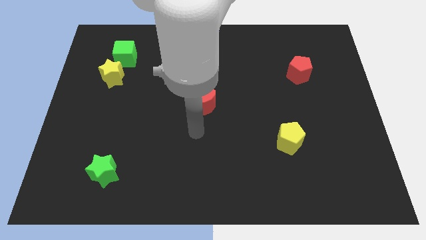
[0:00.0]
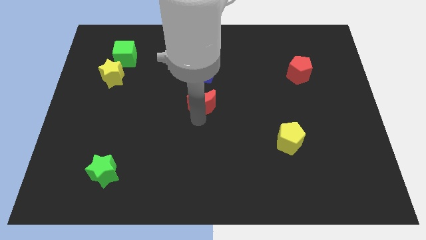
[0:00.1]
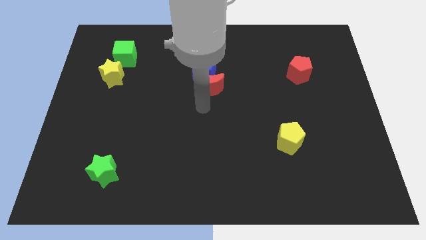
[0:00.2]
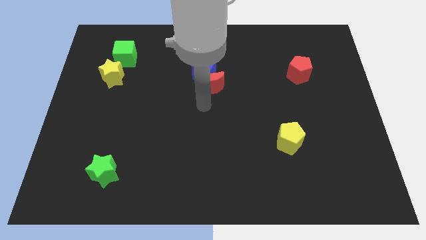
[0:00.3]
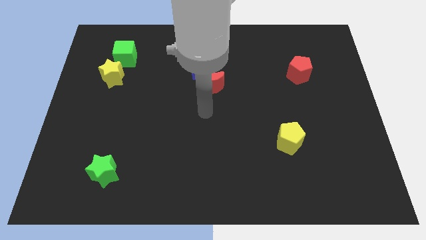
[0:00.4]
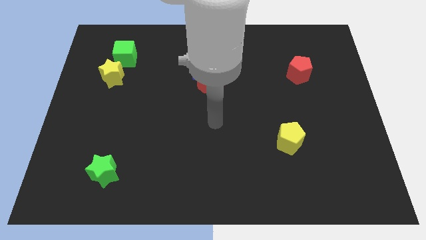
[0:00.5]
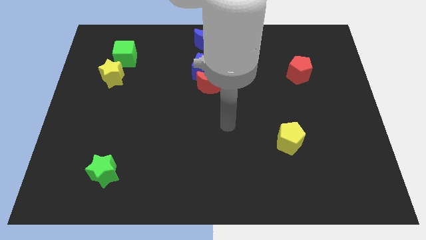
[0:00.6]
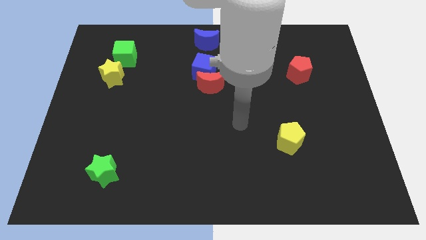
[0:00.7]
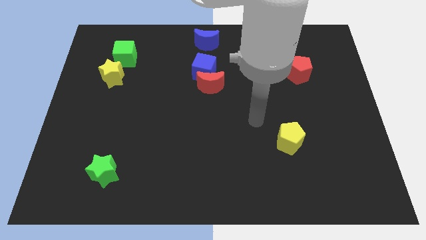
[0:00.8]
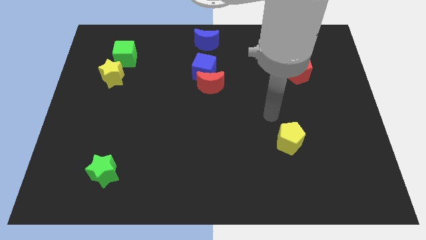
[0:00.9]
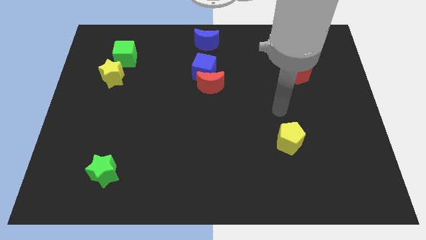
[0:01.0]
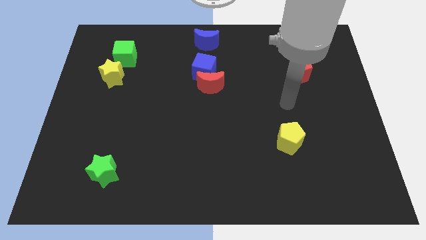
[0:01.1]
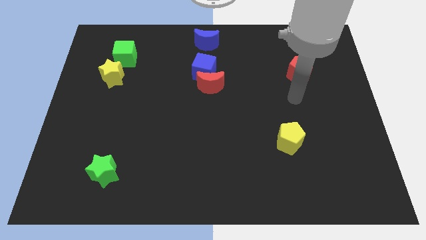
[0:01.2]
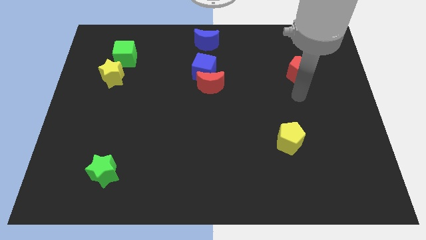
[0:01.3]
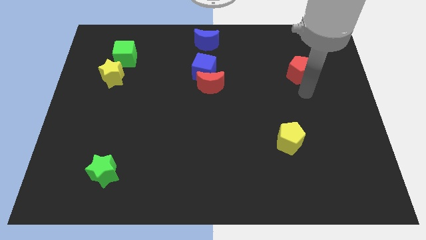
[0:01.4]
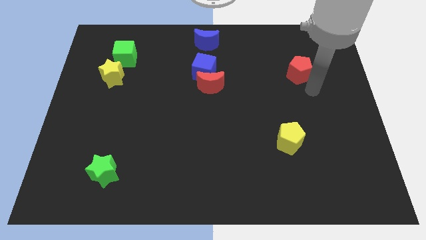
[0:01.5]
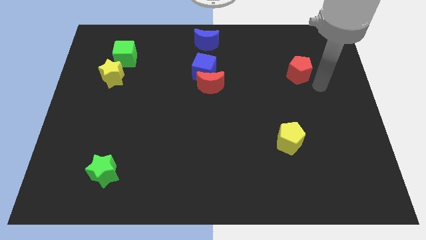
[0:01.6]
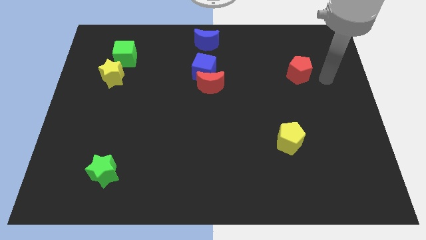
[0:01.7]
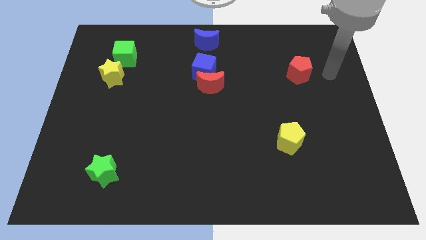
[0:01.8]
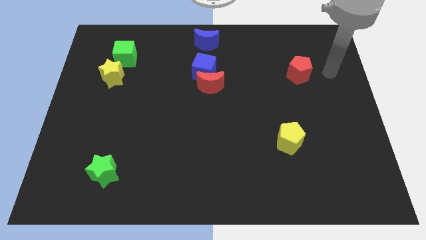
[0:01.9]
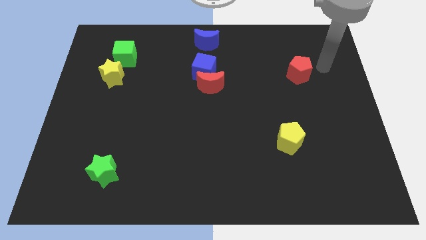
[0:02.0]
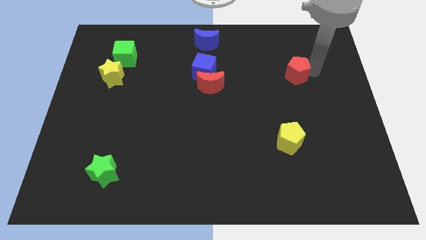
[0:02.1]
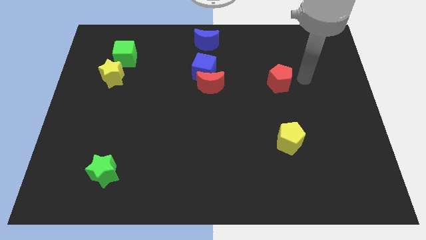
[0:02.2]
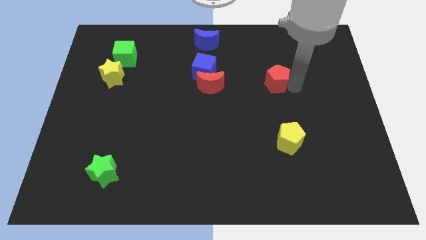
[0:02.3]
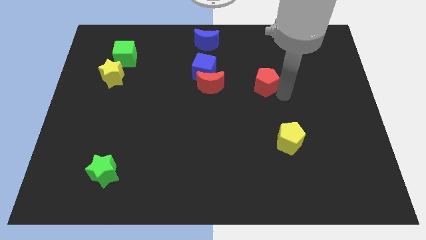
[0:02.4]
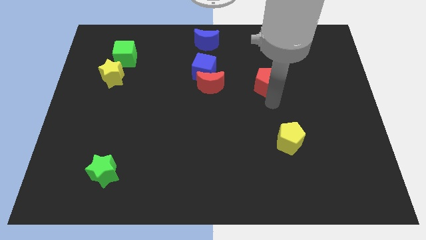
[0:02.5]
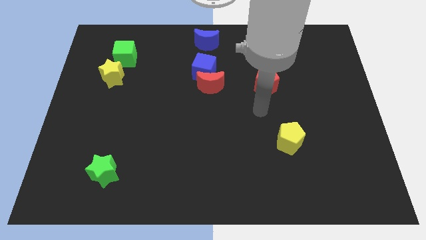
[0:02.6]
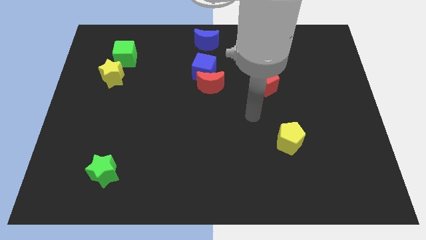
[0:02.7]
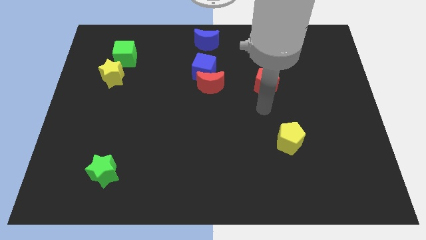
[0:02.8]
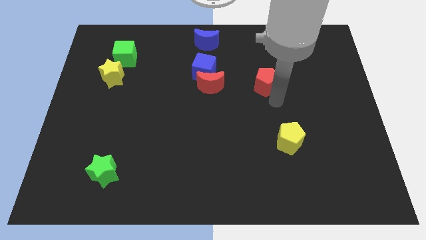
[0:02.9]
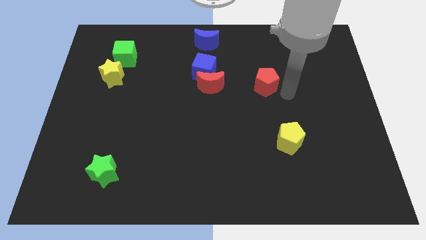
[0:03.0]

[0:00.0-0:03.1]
slightly push the red pentagon towards the left side

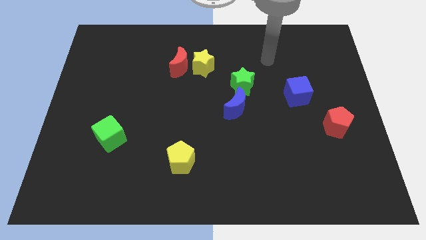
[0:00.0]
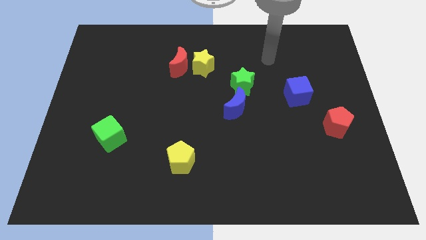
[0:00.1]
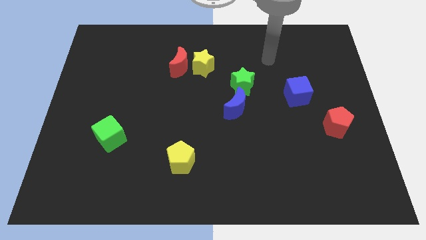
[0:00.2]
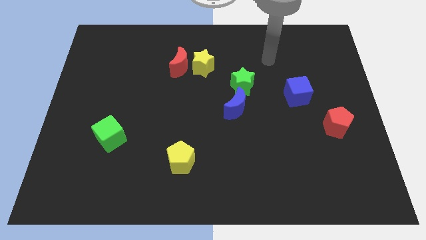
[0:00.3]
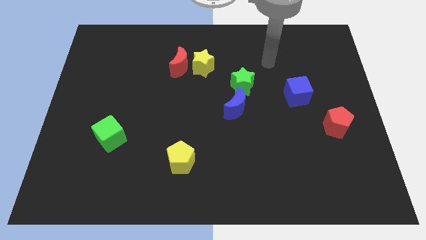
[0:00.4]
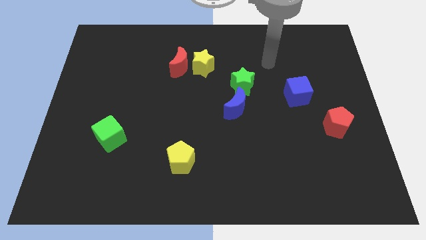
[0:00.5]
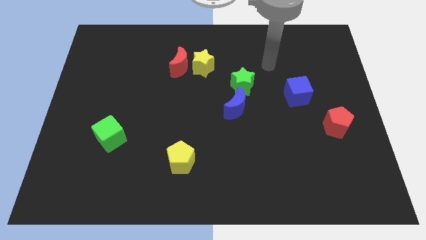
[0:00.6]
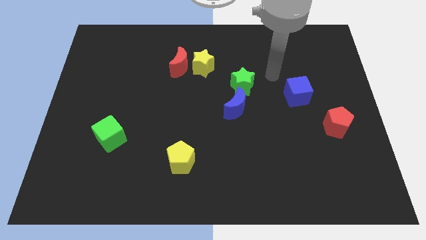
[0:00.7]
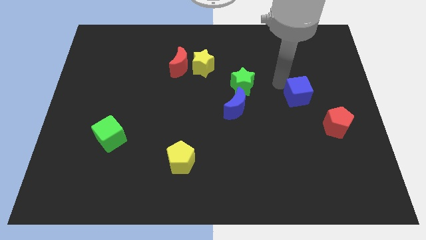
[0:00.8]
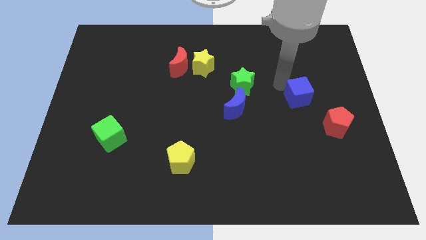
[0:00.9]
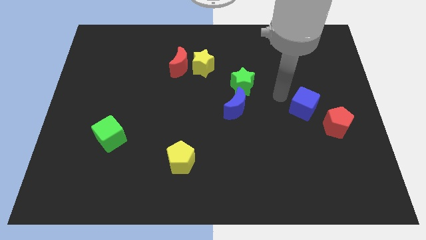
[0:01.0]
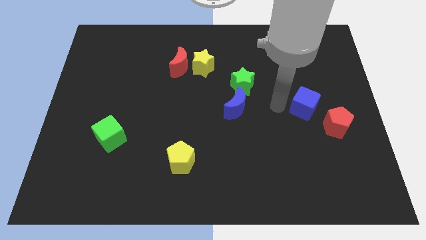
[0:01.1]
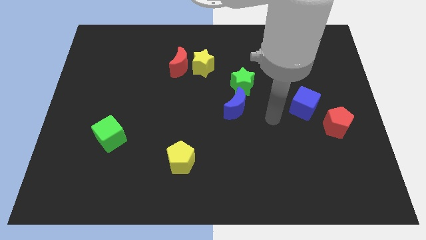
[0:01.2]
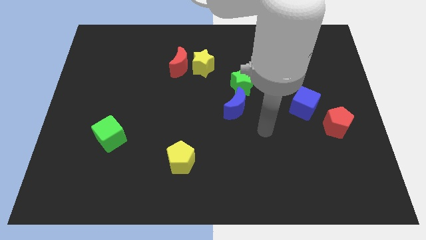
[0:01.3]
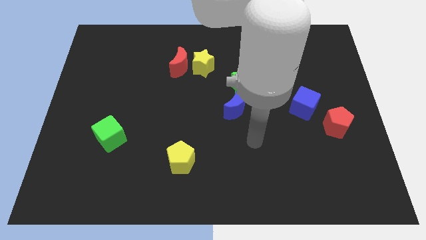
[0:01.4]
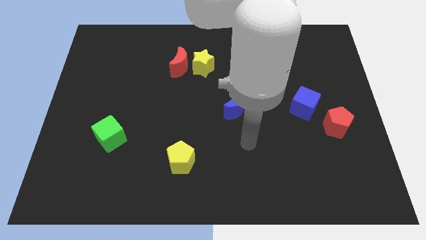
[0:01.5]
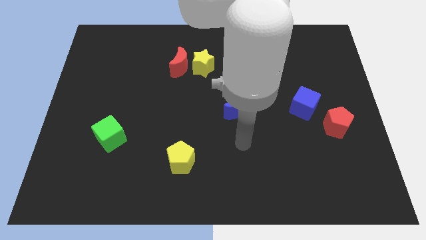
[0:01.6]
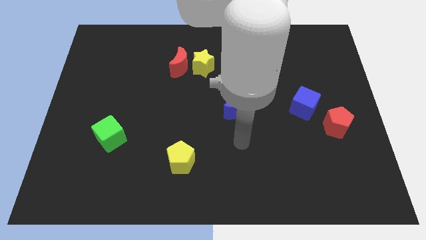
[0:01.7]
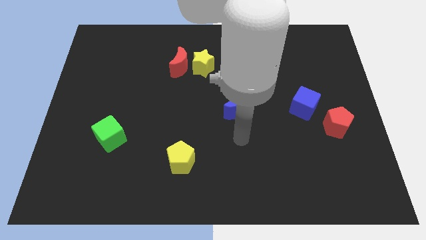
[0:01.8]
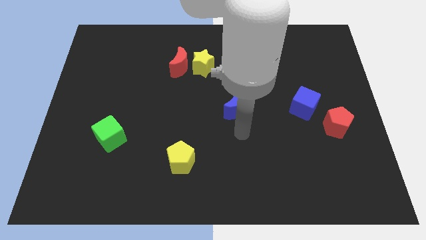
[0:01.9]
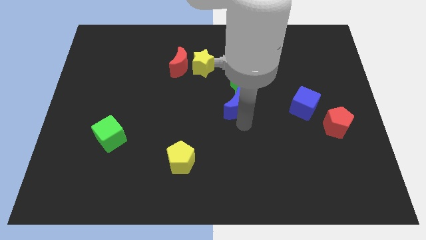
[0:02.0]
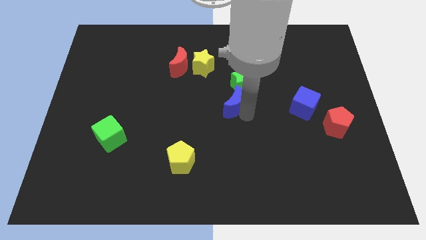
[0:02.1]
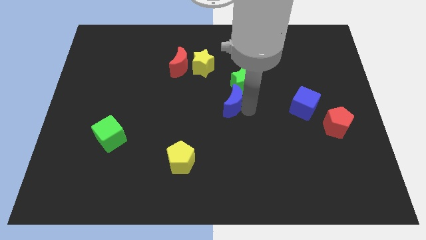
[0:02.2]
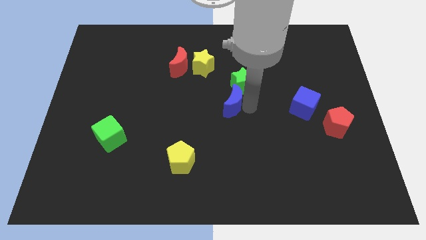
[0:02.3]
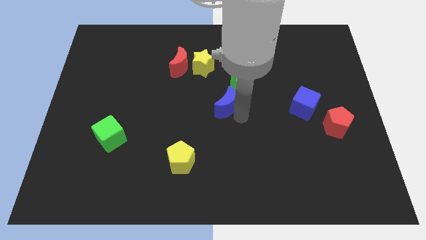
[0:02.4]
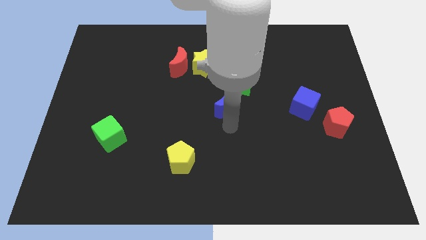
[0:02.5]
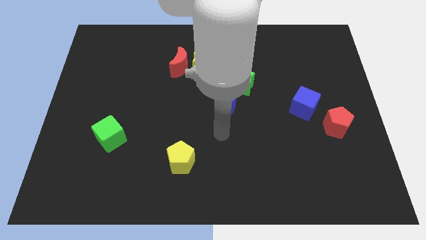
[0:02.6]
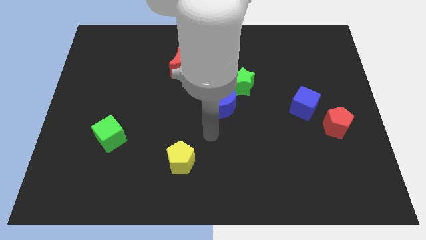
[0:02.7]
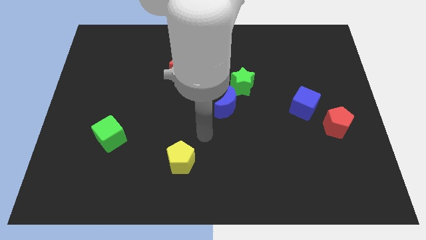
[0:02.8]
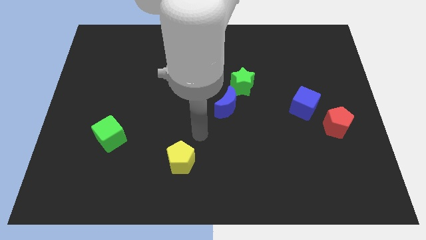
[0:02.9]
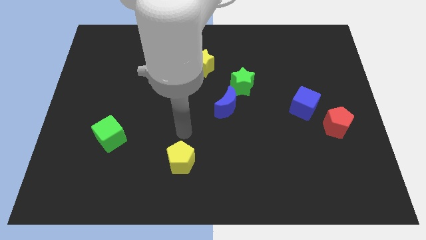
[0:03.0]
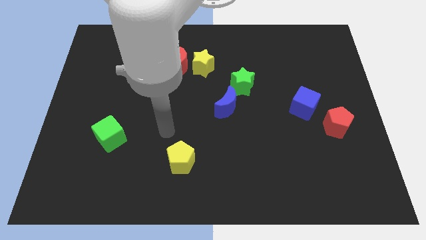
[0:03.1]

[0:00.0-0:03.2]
touch the blue cube and blue crescent

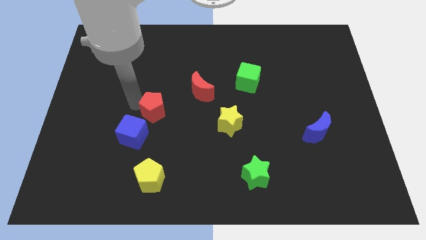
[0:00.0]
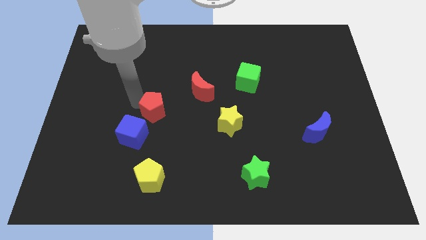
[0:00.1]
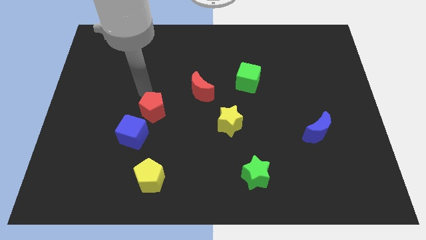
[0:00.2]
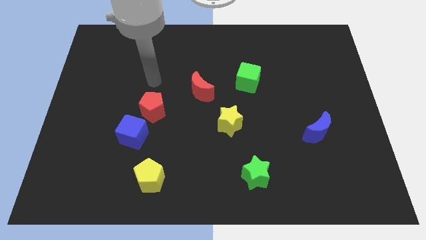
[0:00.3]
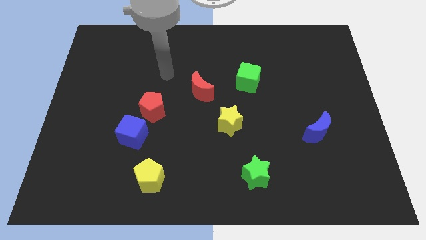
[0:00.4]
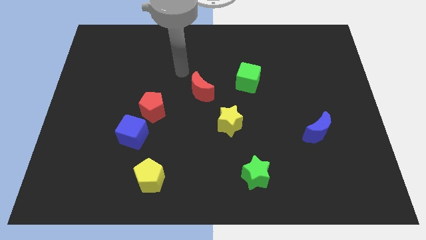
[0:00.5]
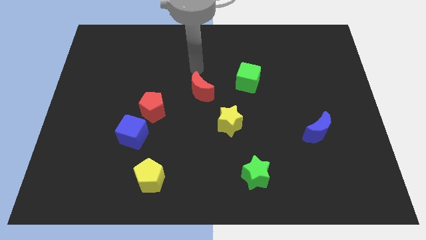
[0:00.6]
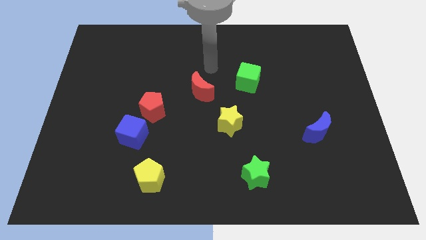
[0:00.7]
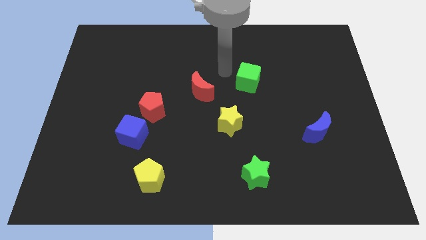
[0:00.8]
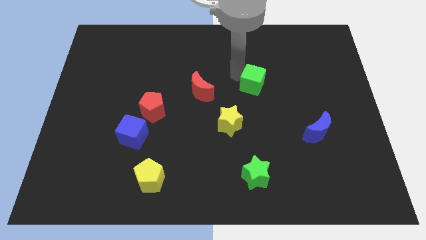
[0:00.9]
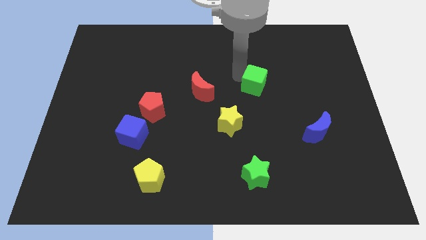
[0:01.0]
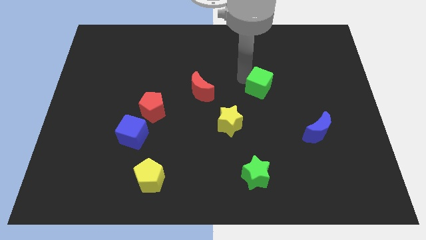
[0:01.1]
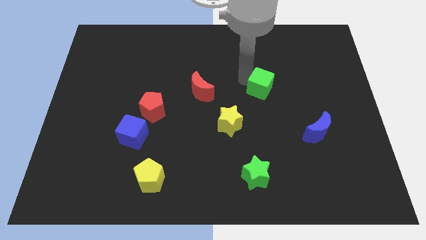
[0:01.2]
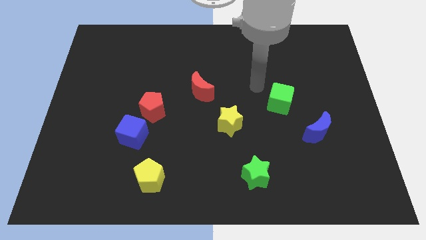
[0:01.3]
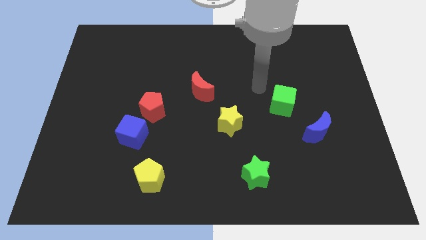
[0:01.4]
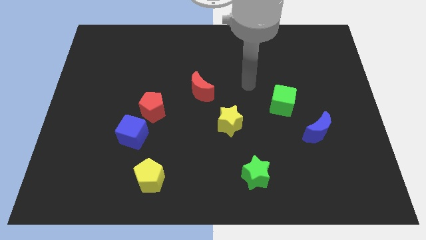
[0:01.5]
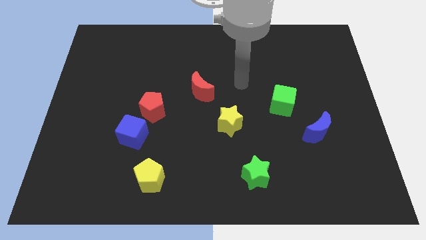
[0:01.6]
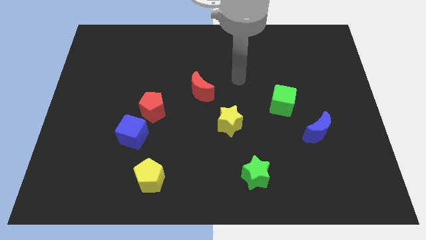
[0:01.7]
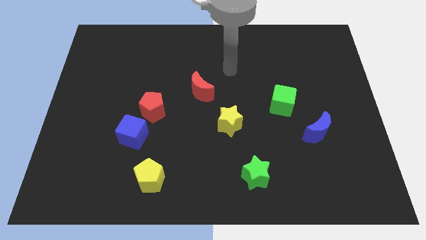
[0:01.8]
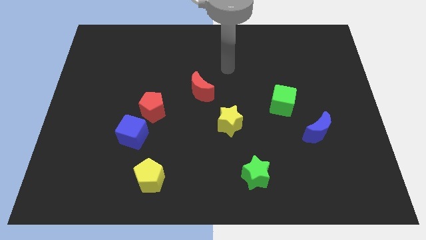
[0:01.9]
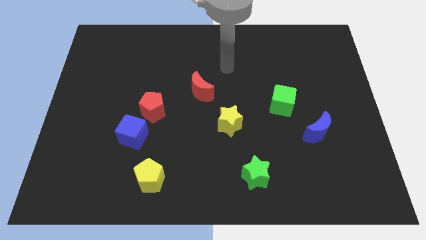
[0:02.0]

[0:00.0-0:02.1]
push the green cube slightly towards the blue moon

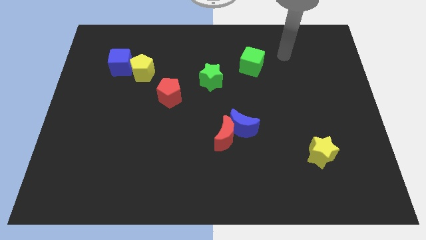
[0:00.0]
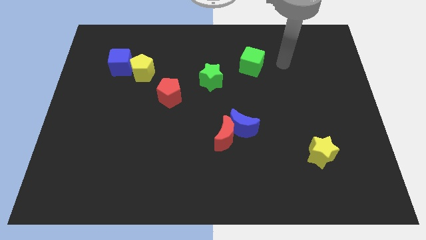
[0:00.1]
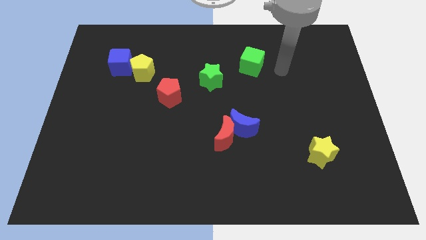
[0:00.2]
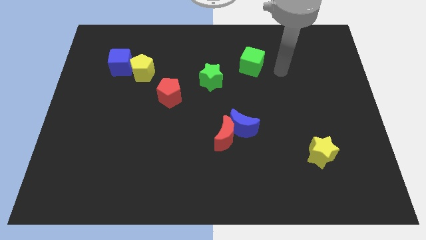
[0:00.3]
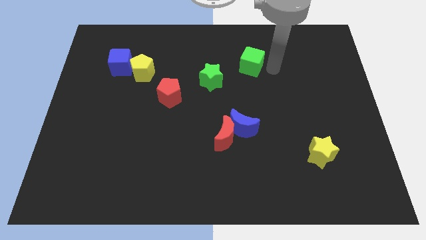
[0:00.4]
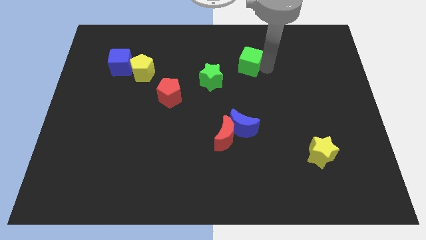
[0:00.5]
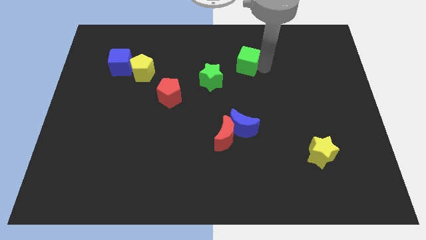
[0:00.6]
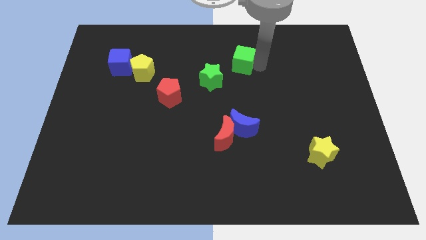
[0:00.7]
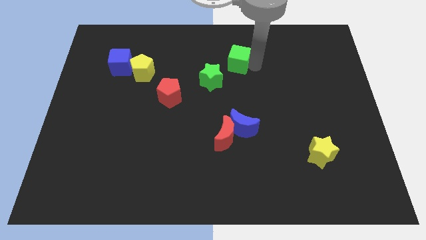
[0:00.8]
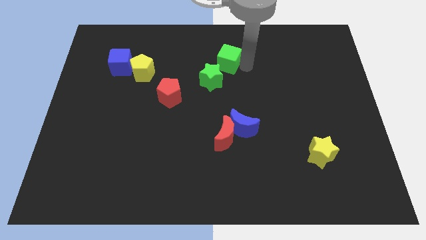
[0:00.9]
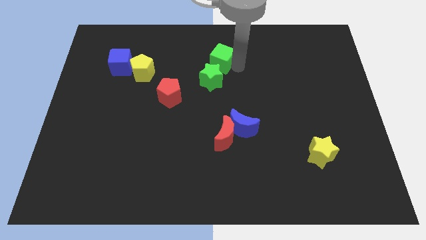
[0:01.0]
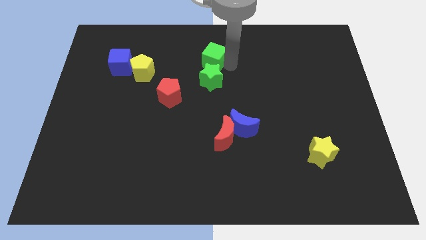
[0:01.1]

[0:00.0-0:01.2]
place the green cube above the green star
